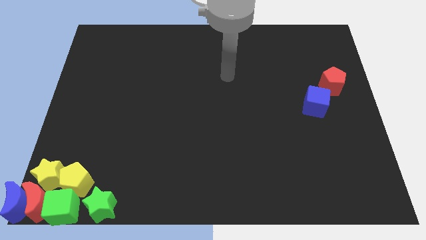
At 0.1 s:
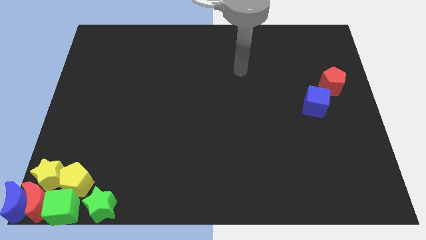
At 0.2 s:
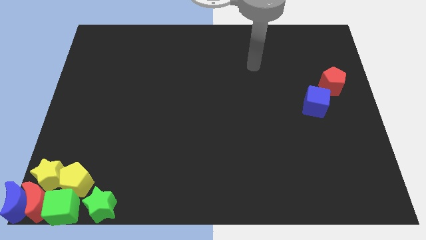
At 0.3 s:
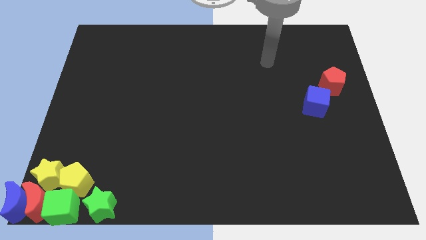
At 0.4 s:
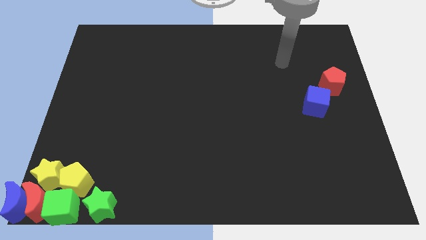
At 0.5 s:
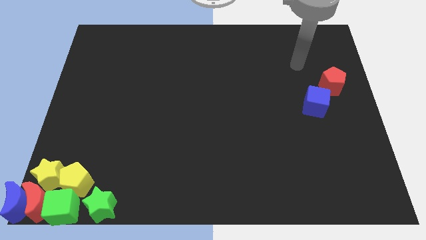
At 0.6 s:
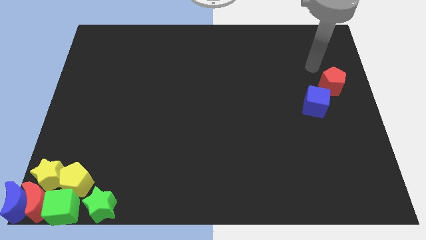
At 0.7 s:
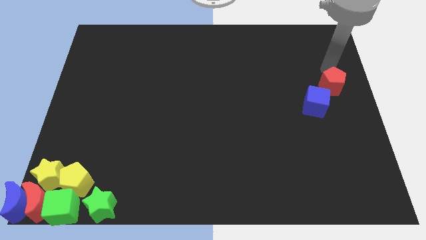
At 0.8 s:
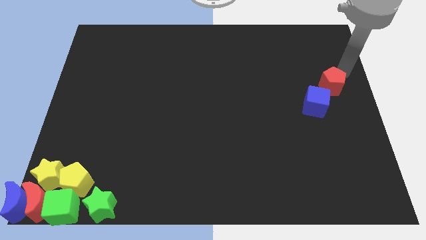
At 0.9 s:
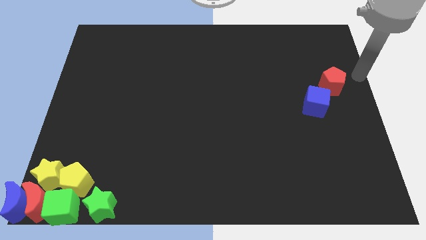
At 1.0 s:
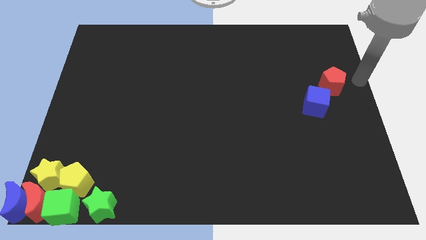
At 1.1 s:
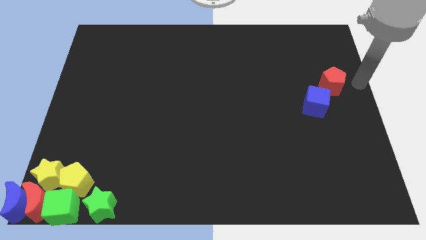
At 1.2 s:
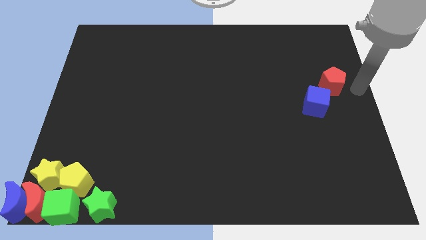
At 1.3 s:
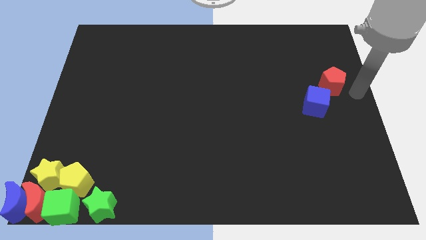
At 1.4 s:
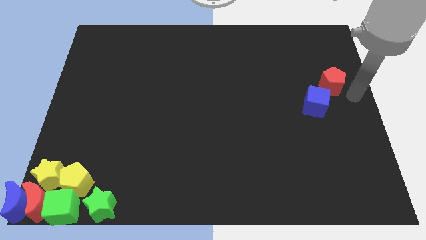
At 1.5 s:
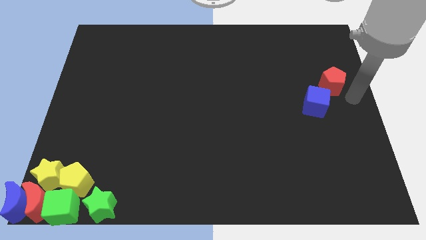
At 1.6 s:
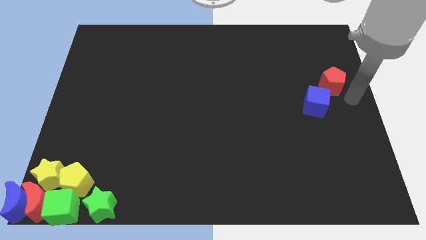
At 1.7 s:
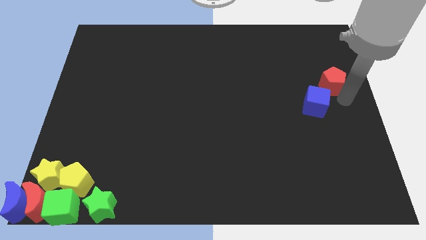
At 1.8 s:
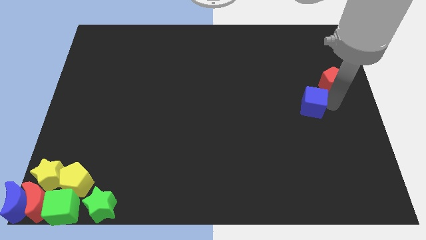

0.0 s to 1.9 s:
move the arm to the right side of the blue cube

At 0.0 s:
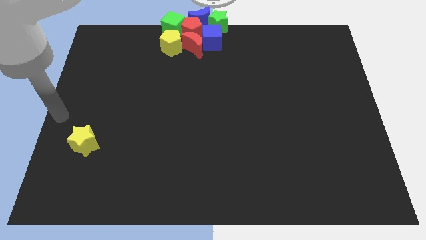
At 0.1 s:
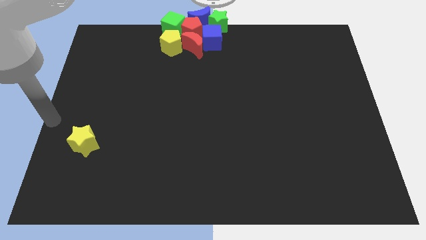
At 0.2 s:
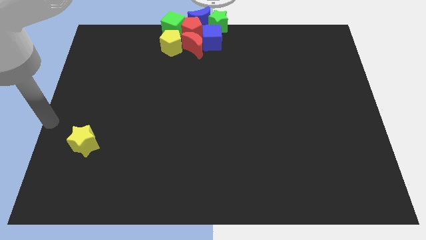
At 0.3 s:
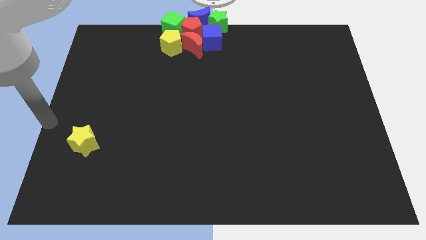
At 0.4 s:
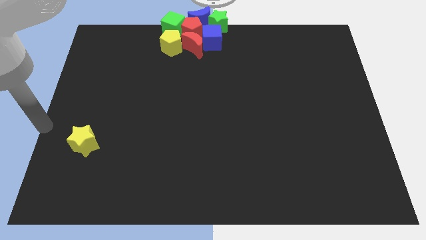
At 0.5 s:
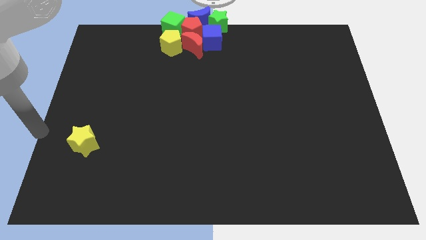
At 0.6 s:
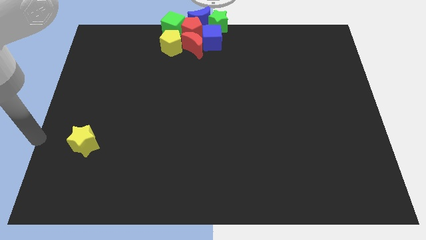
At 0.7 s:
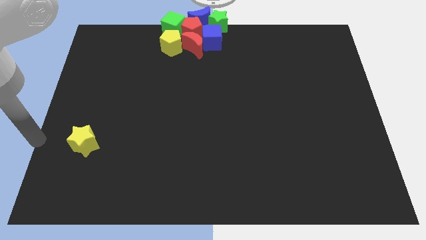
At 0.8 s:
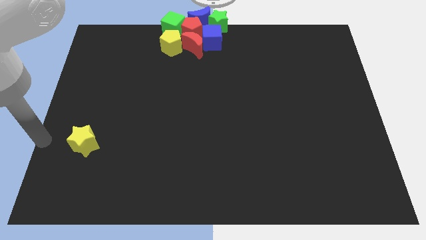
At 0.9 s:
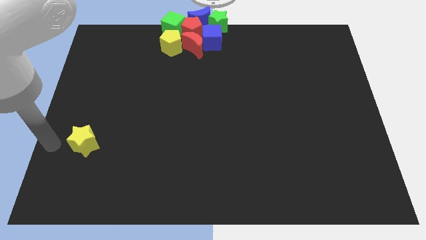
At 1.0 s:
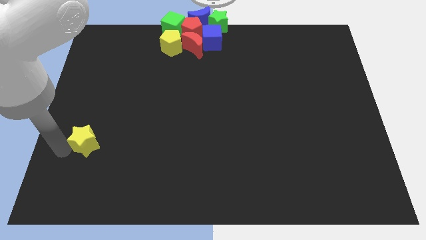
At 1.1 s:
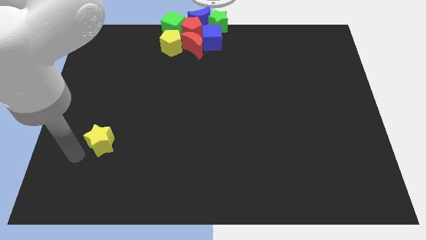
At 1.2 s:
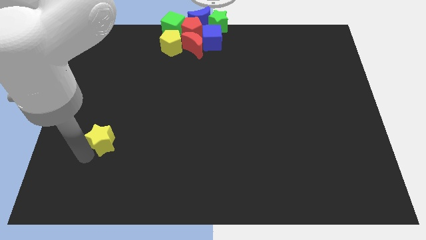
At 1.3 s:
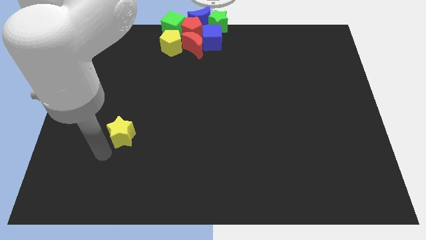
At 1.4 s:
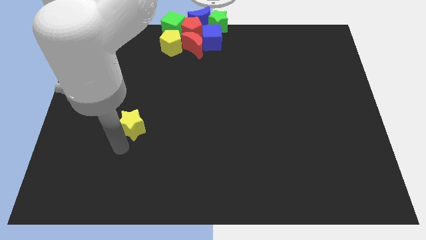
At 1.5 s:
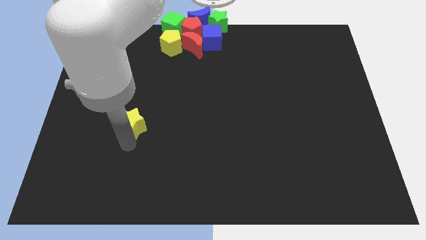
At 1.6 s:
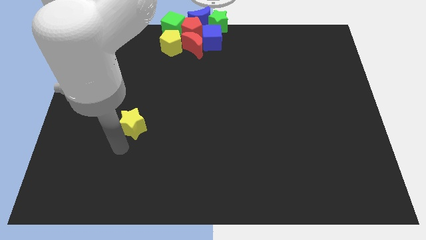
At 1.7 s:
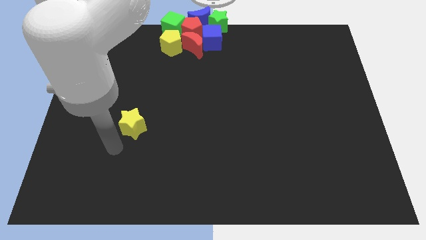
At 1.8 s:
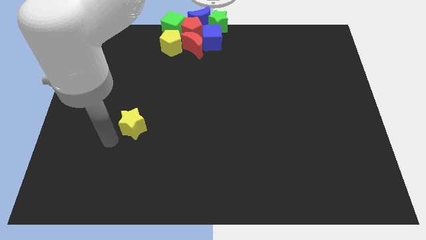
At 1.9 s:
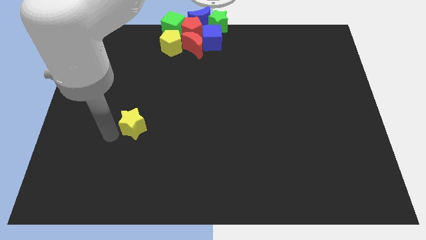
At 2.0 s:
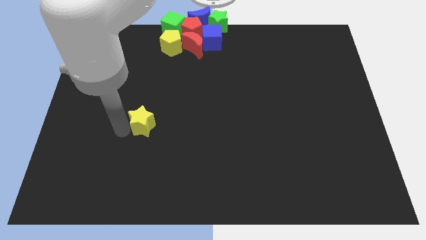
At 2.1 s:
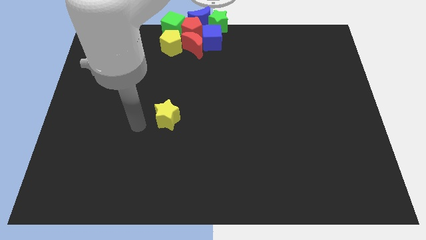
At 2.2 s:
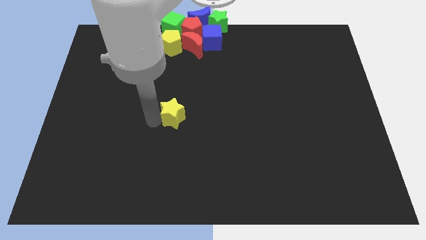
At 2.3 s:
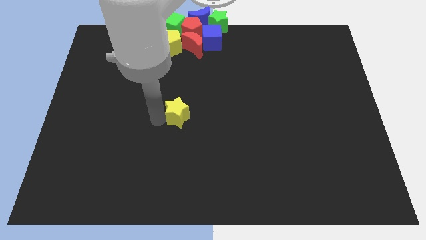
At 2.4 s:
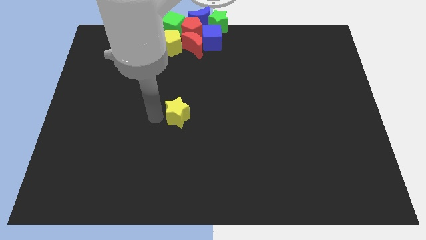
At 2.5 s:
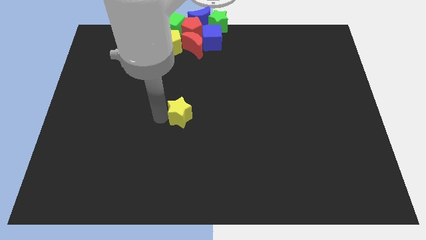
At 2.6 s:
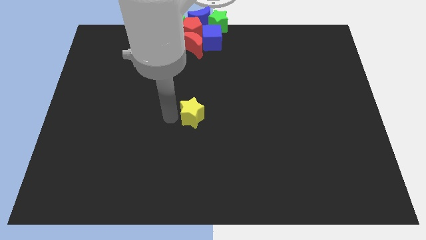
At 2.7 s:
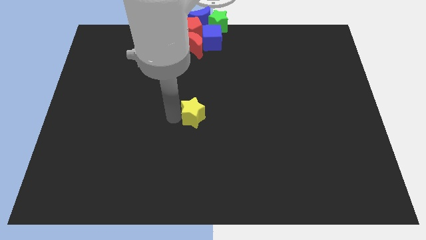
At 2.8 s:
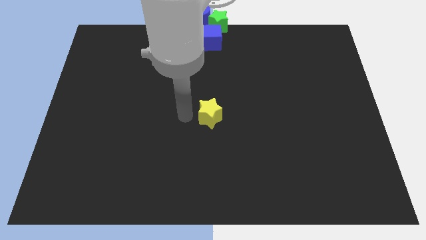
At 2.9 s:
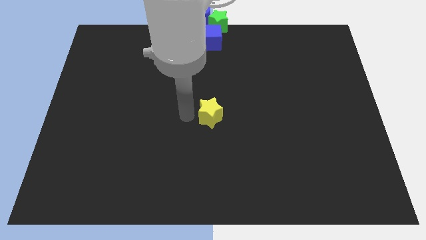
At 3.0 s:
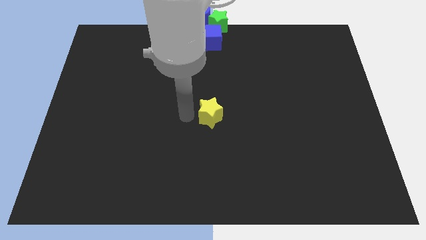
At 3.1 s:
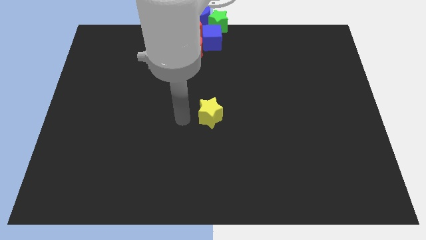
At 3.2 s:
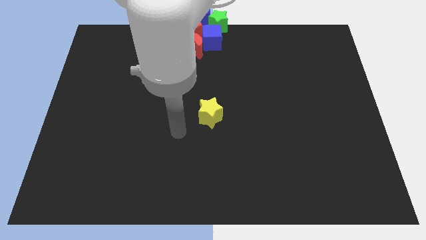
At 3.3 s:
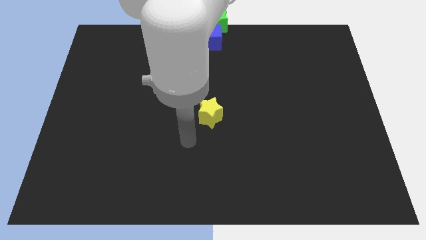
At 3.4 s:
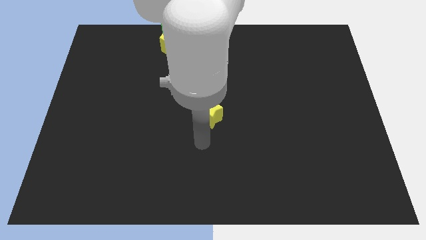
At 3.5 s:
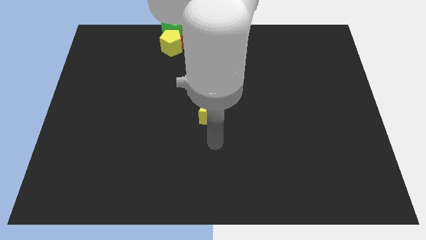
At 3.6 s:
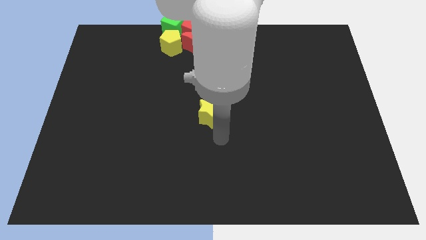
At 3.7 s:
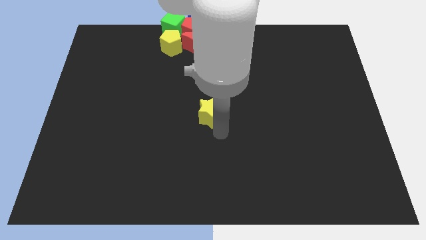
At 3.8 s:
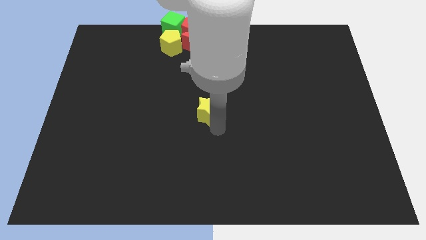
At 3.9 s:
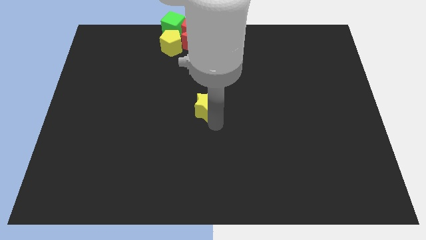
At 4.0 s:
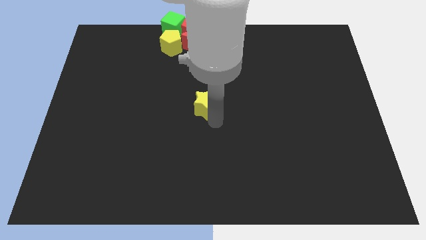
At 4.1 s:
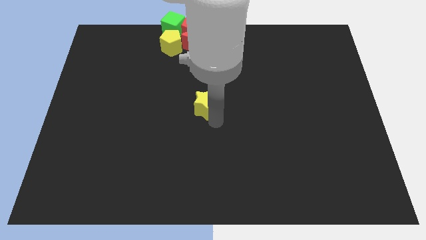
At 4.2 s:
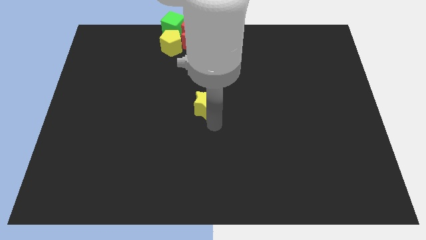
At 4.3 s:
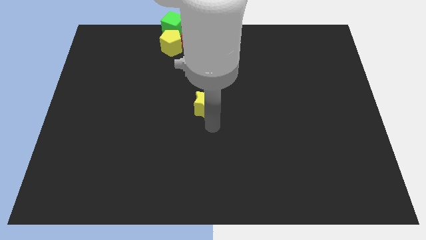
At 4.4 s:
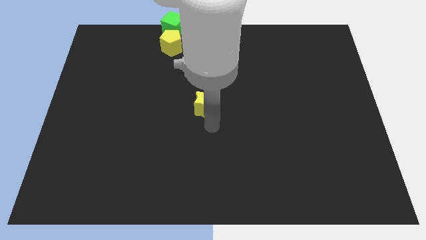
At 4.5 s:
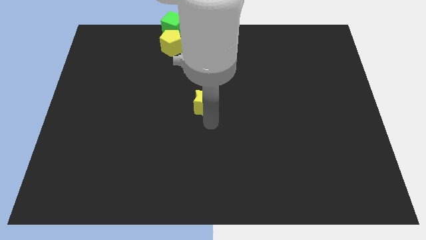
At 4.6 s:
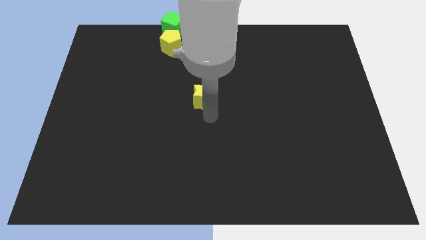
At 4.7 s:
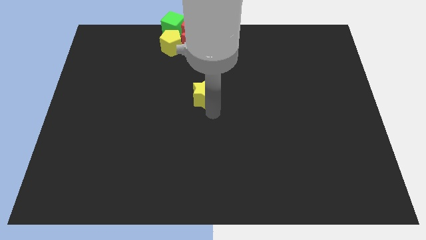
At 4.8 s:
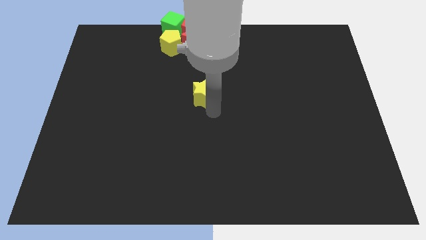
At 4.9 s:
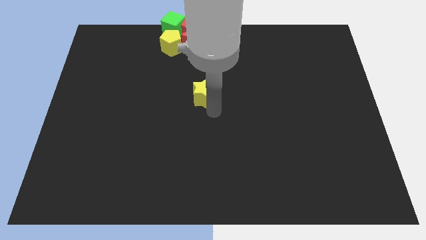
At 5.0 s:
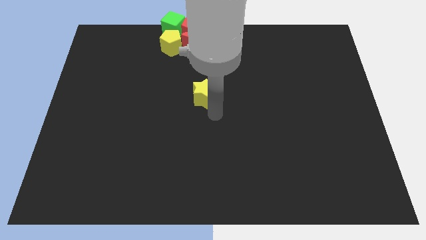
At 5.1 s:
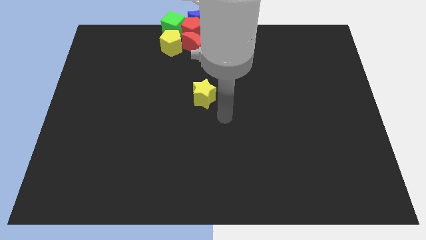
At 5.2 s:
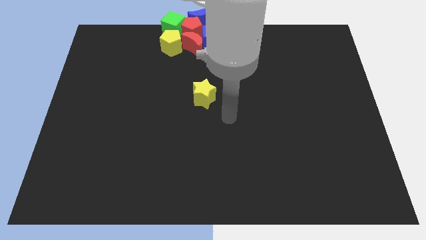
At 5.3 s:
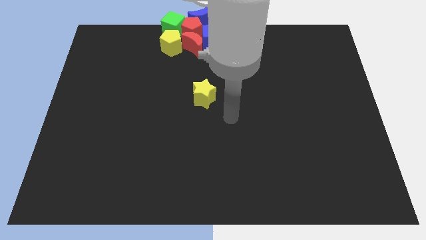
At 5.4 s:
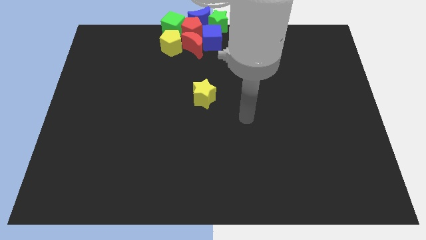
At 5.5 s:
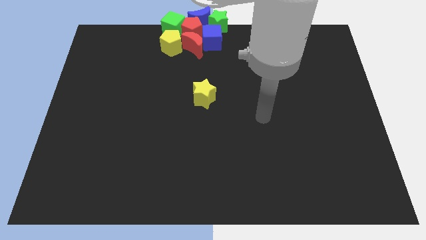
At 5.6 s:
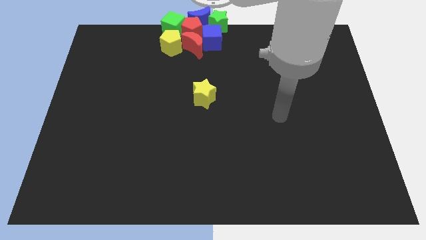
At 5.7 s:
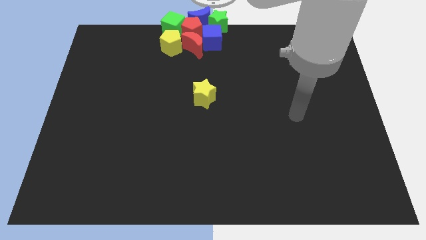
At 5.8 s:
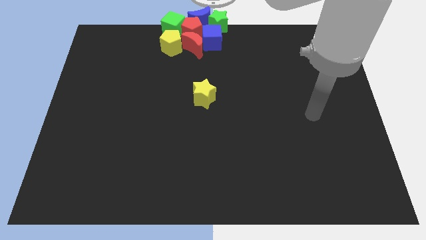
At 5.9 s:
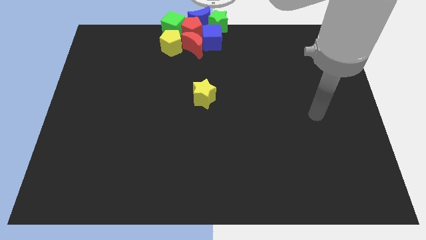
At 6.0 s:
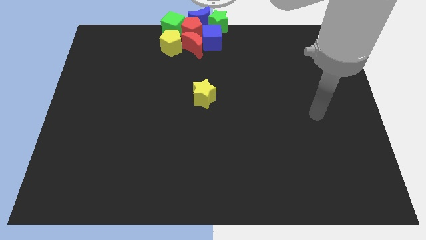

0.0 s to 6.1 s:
move the yellow star to the middle of the board

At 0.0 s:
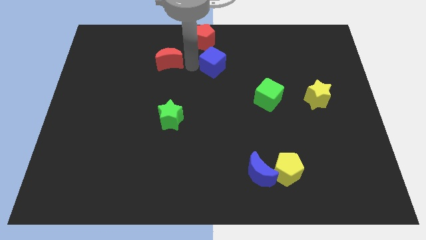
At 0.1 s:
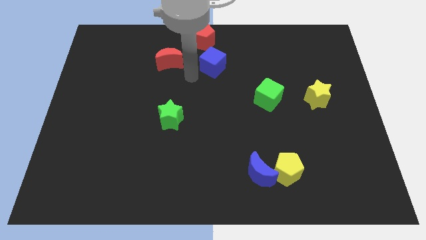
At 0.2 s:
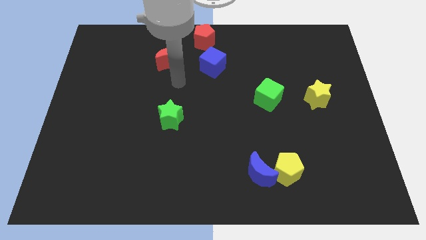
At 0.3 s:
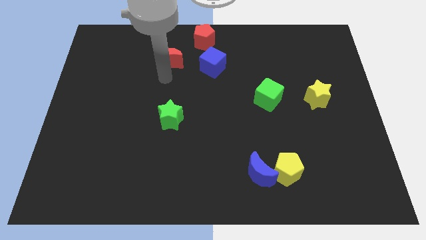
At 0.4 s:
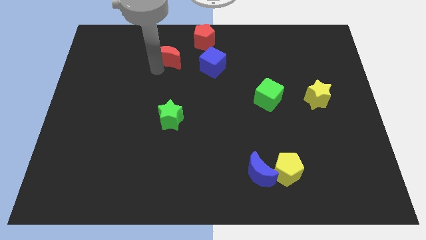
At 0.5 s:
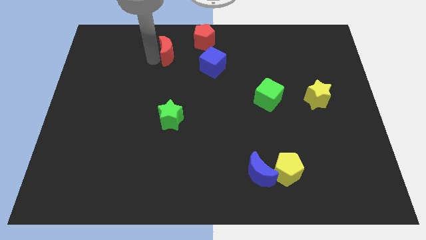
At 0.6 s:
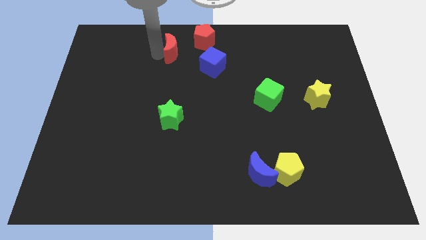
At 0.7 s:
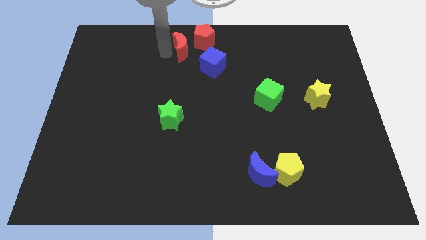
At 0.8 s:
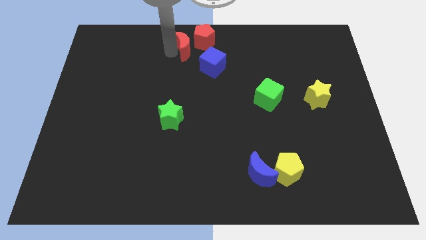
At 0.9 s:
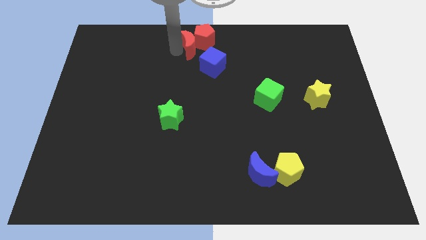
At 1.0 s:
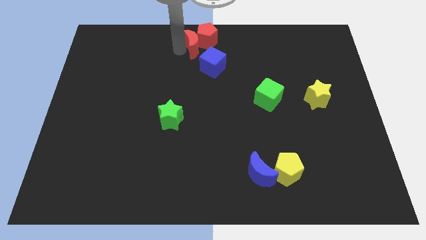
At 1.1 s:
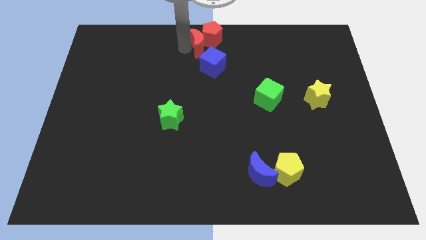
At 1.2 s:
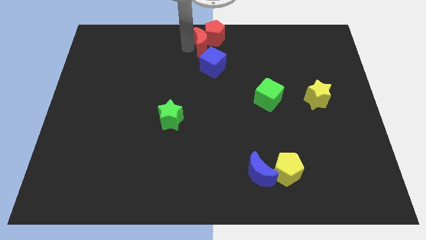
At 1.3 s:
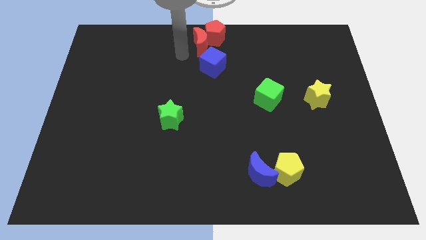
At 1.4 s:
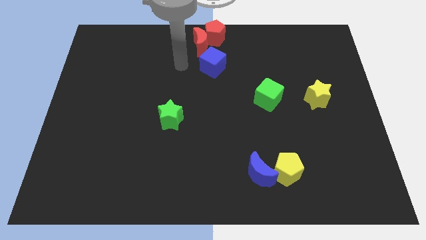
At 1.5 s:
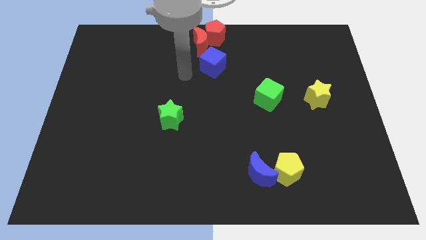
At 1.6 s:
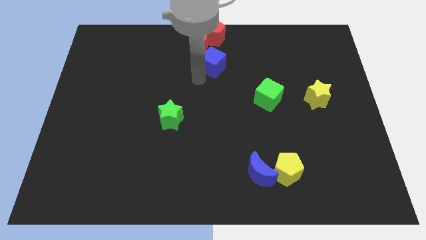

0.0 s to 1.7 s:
put the red moon into the red pentagon
